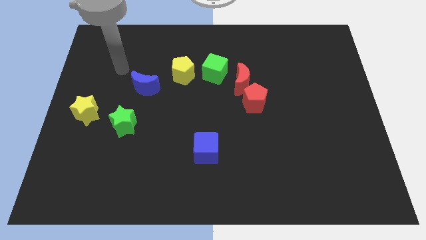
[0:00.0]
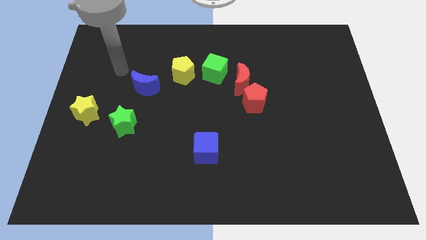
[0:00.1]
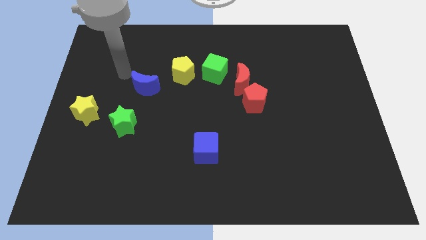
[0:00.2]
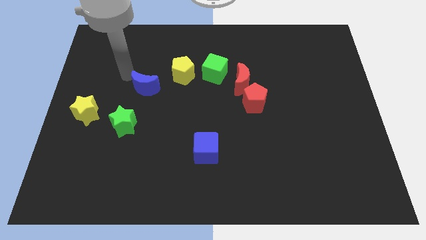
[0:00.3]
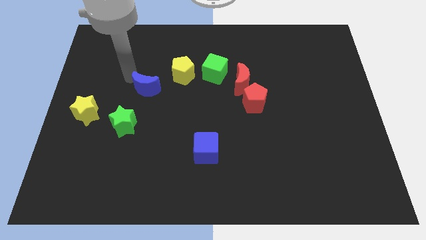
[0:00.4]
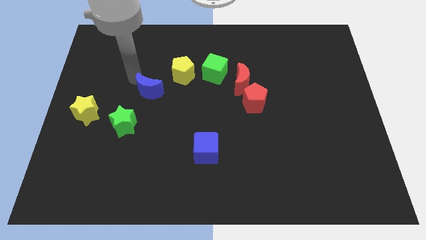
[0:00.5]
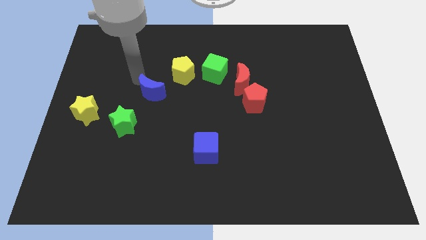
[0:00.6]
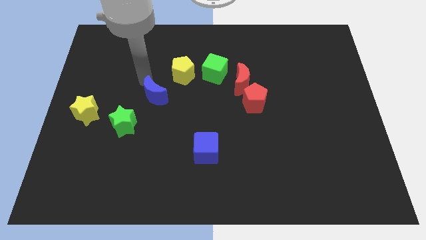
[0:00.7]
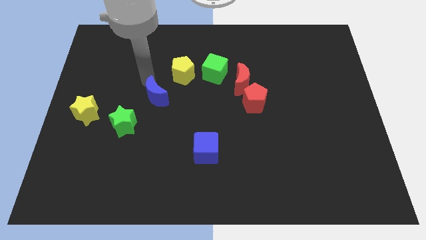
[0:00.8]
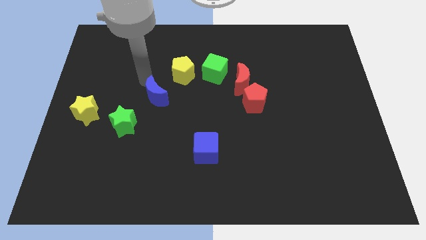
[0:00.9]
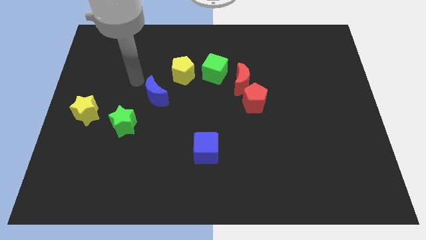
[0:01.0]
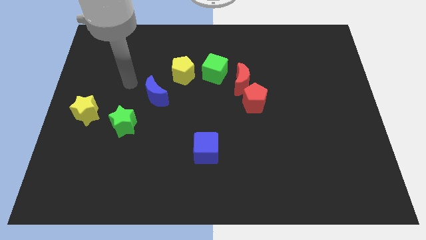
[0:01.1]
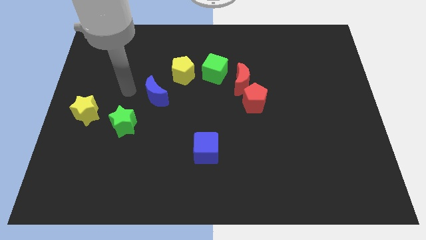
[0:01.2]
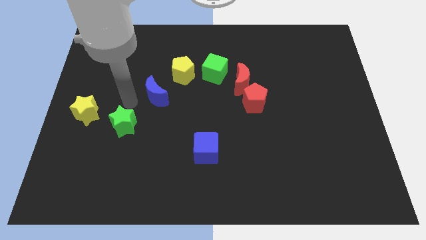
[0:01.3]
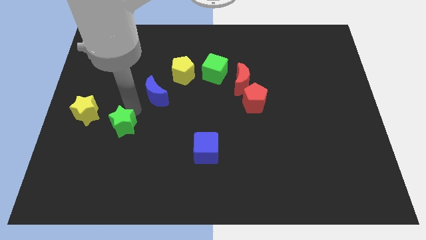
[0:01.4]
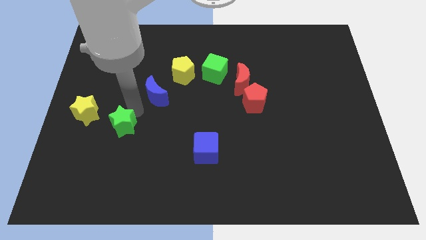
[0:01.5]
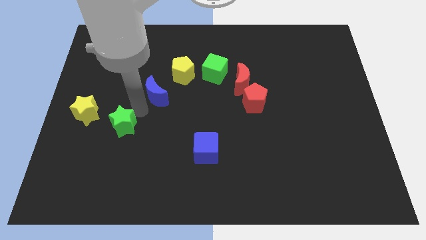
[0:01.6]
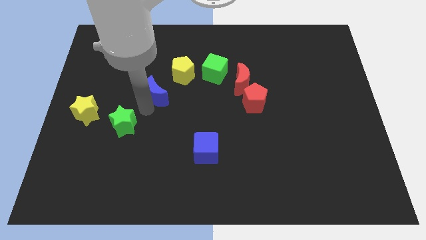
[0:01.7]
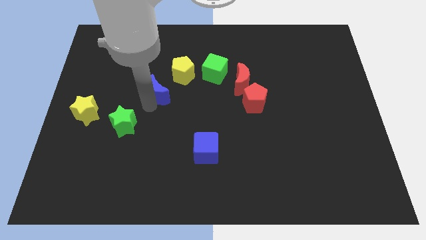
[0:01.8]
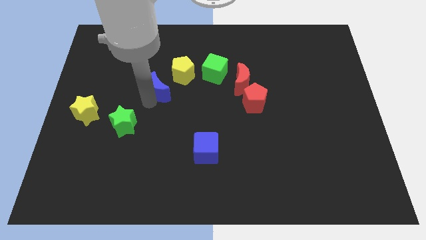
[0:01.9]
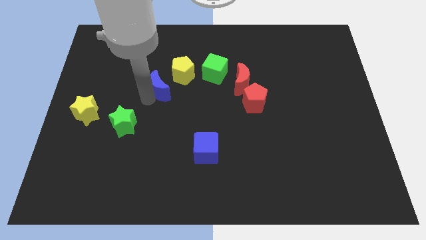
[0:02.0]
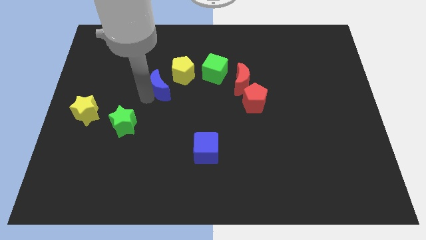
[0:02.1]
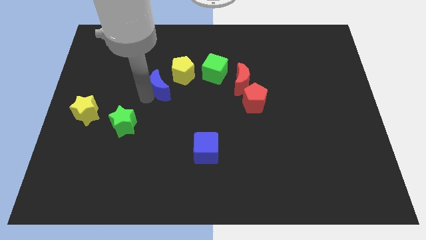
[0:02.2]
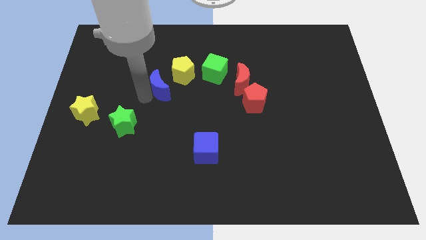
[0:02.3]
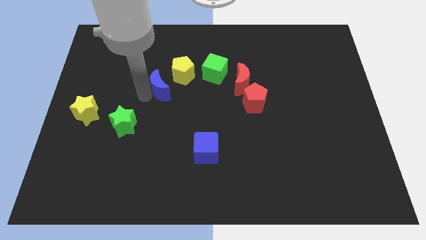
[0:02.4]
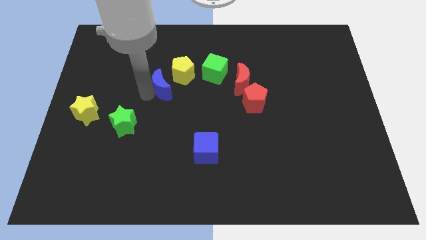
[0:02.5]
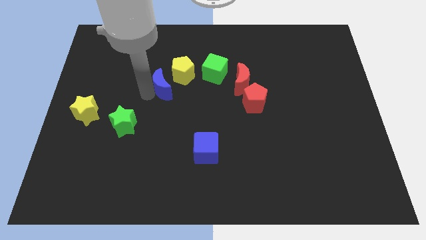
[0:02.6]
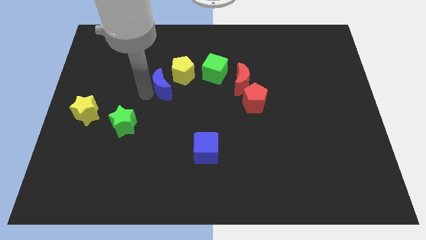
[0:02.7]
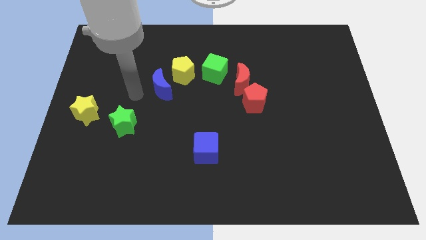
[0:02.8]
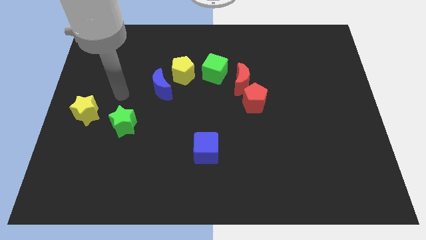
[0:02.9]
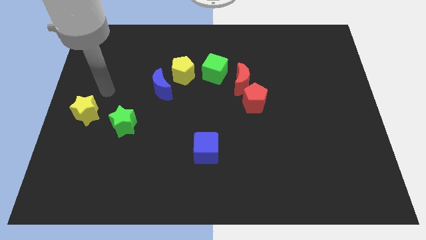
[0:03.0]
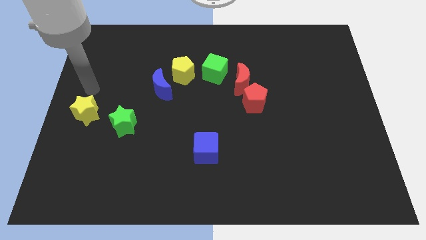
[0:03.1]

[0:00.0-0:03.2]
push blue moon towards yellow pentagon

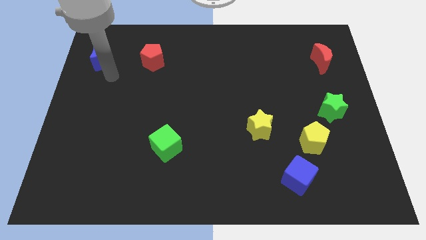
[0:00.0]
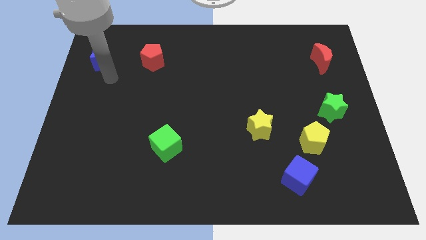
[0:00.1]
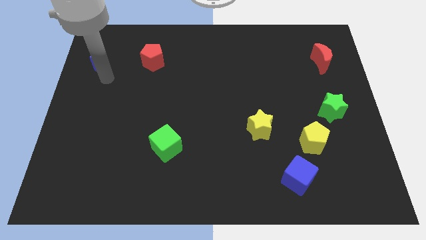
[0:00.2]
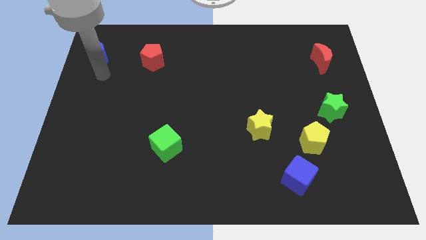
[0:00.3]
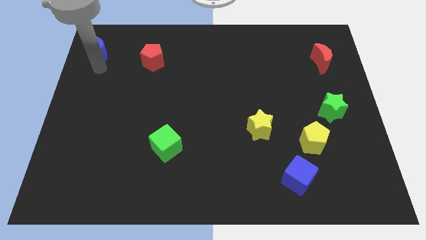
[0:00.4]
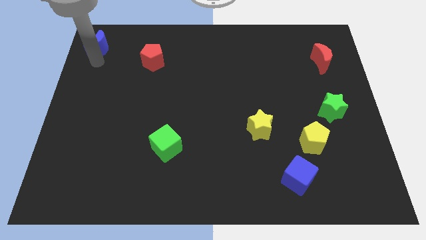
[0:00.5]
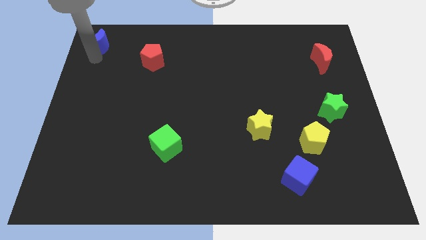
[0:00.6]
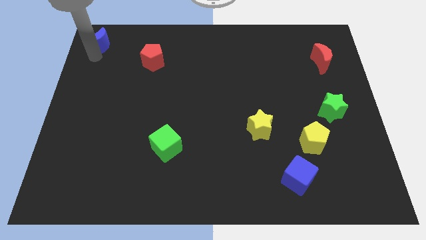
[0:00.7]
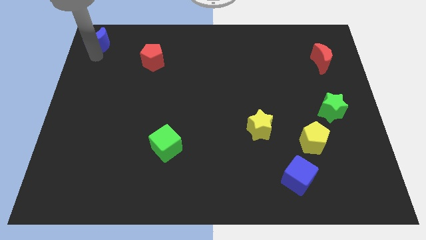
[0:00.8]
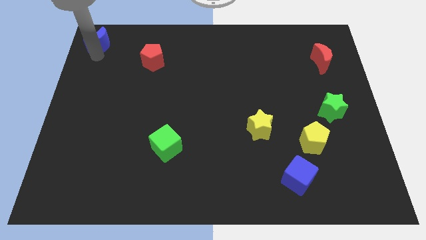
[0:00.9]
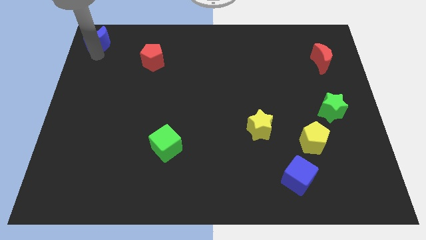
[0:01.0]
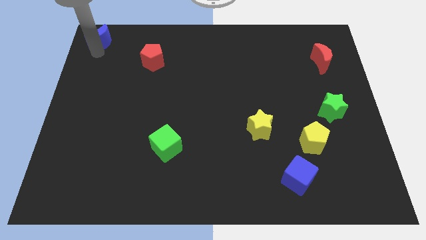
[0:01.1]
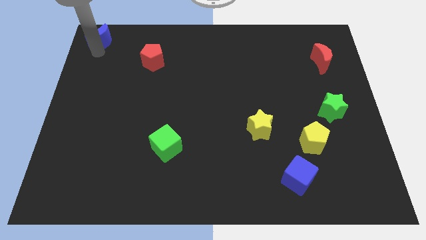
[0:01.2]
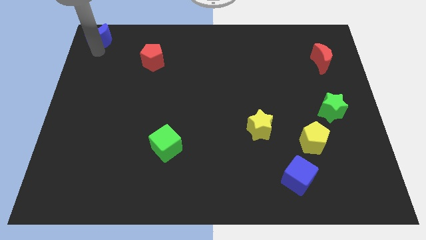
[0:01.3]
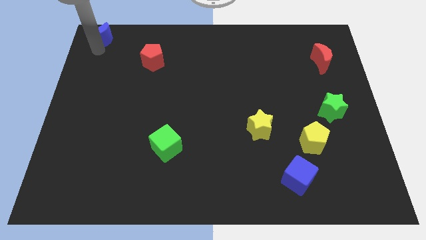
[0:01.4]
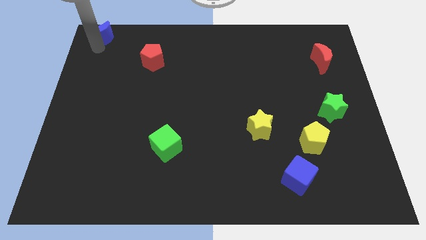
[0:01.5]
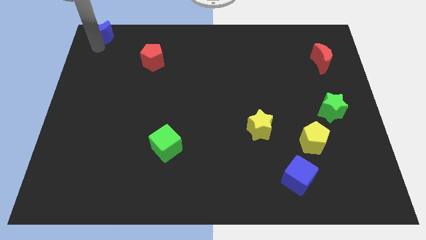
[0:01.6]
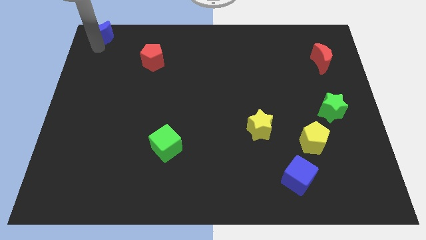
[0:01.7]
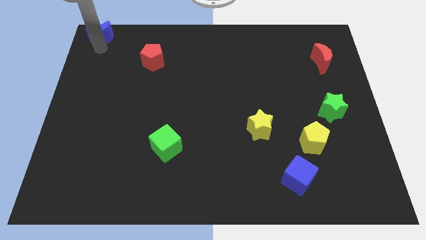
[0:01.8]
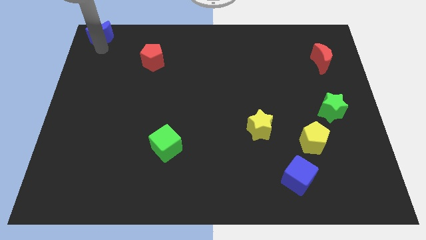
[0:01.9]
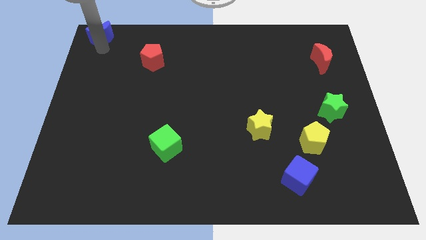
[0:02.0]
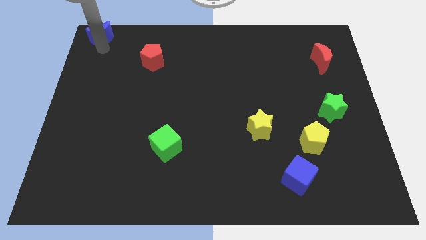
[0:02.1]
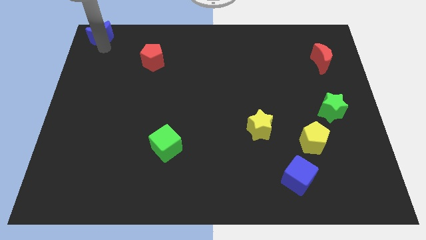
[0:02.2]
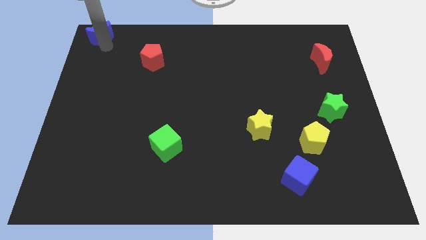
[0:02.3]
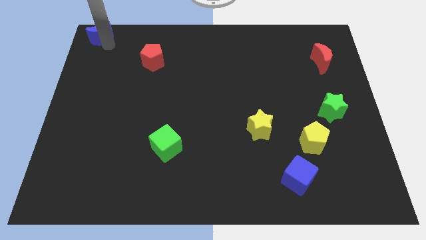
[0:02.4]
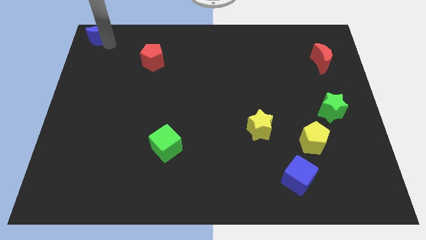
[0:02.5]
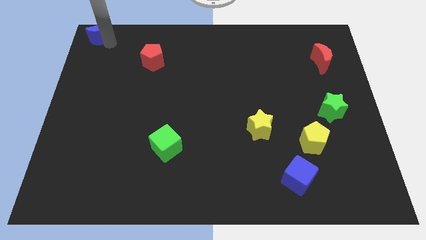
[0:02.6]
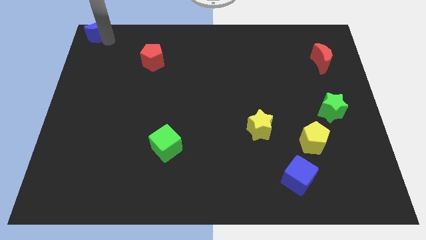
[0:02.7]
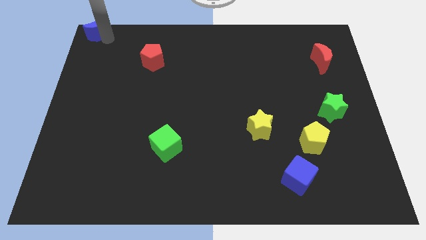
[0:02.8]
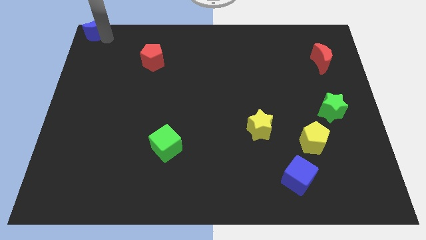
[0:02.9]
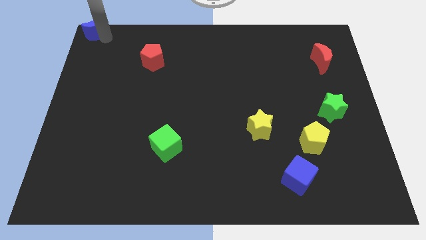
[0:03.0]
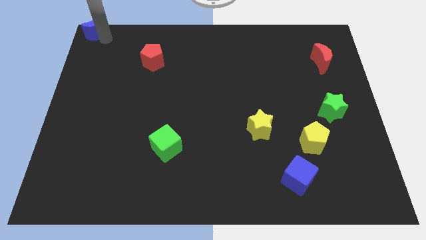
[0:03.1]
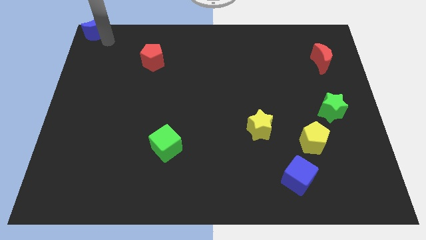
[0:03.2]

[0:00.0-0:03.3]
move the blue crescent to the top left side of the board

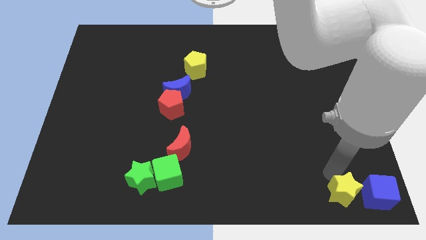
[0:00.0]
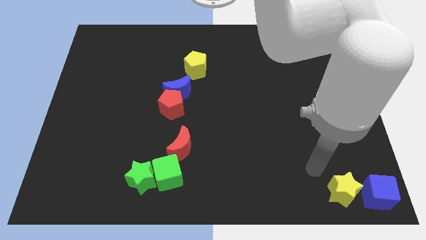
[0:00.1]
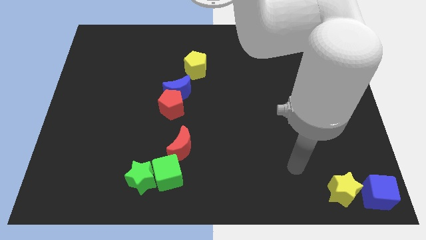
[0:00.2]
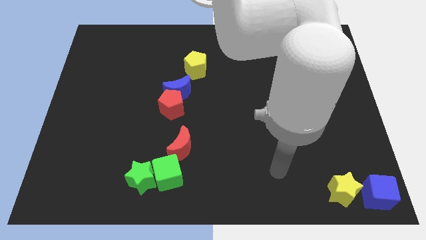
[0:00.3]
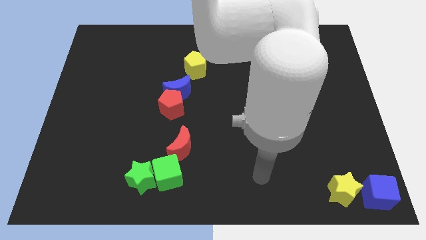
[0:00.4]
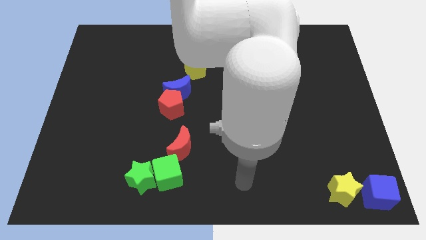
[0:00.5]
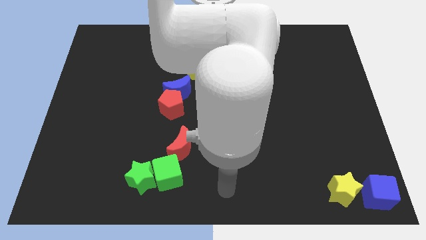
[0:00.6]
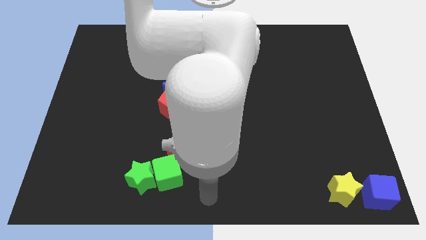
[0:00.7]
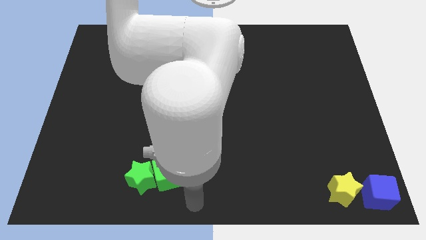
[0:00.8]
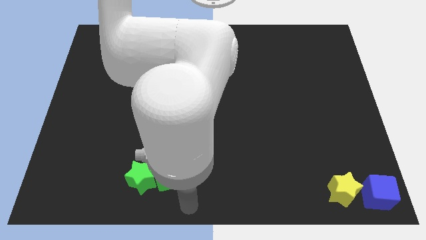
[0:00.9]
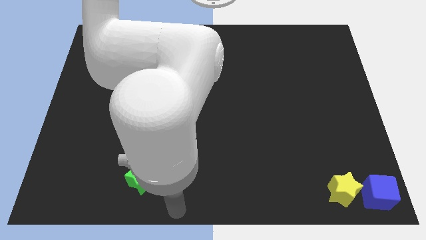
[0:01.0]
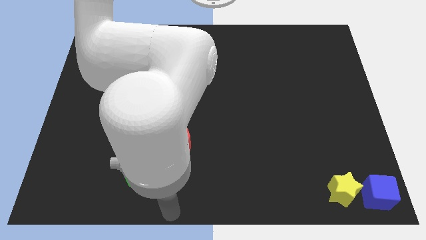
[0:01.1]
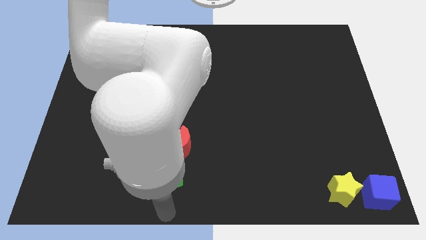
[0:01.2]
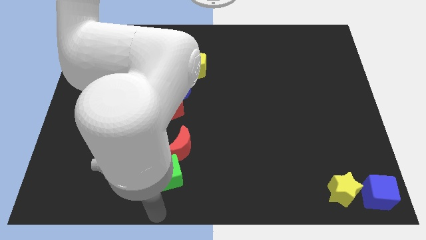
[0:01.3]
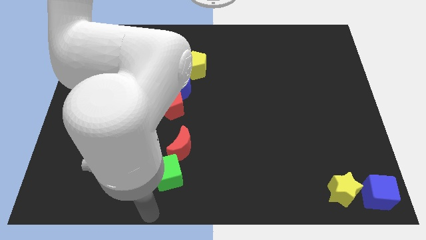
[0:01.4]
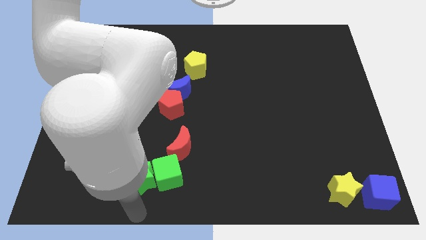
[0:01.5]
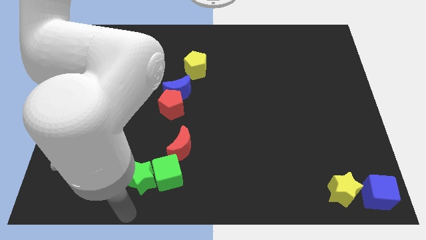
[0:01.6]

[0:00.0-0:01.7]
point your arm at the bottom of the green star

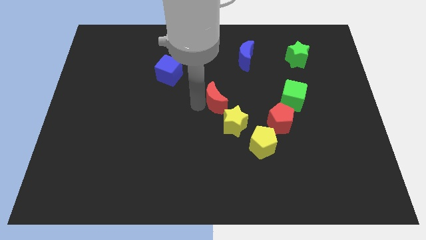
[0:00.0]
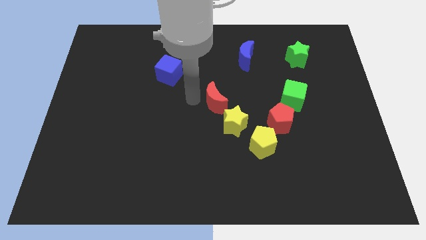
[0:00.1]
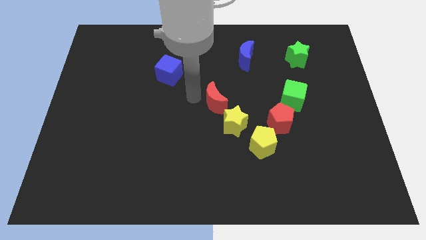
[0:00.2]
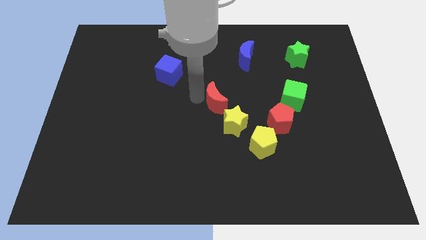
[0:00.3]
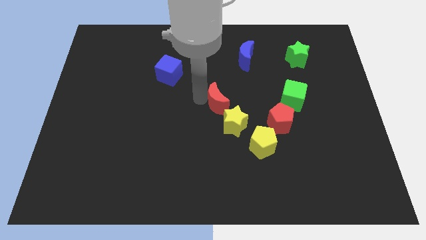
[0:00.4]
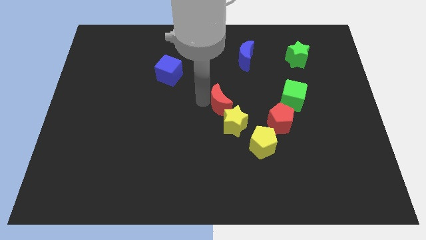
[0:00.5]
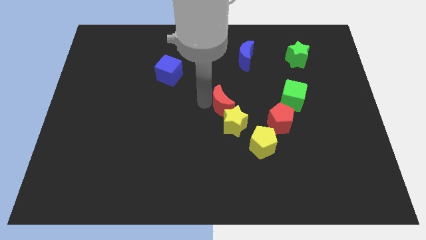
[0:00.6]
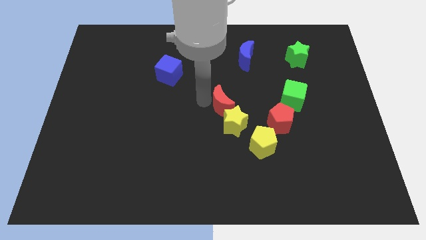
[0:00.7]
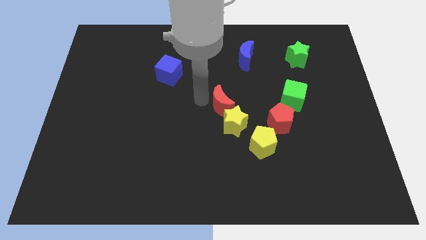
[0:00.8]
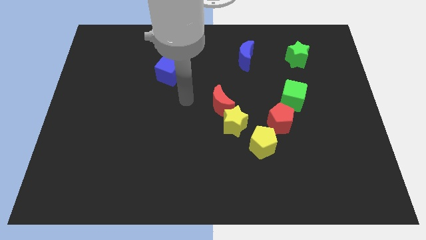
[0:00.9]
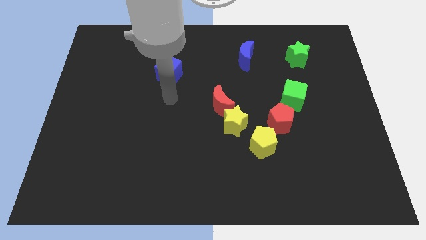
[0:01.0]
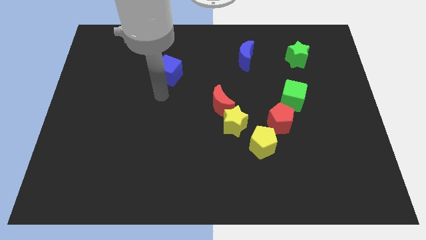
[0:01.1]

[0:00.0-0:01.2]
move the red crescent into the yellow star
